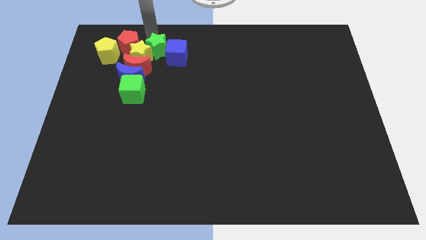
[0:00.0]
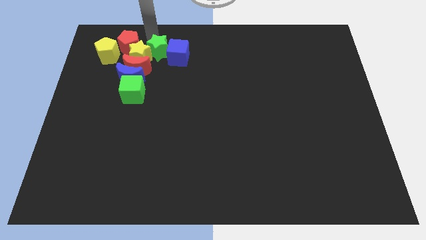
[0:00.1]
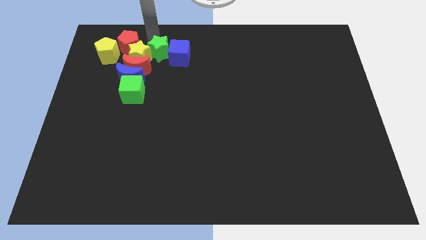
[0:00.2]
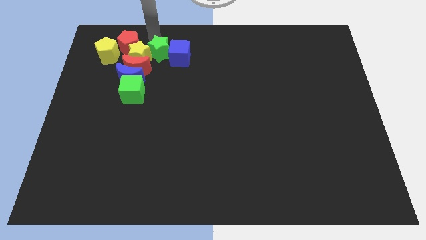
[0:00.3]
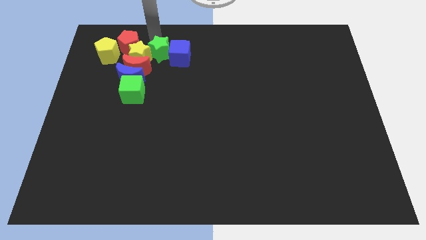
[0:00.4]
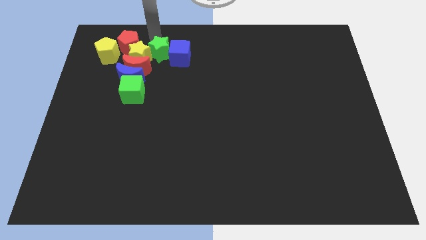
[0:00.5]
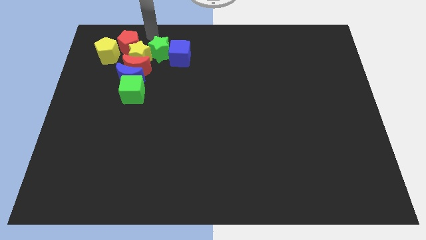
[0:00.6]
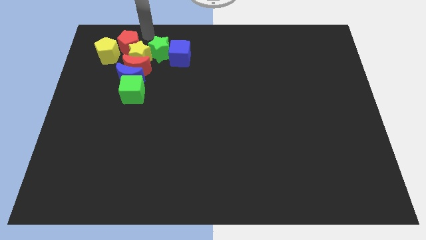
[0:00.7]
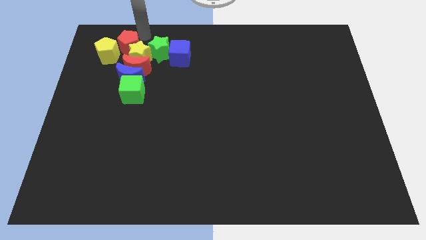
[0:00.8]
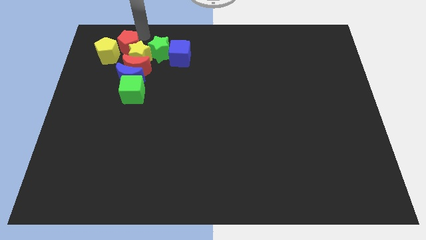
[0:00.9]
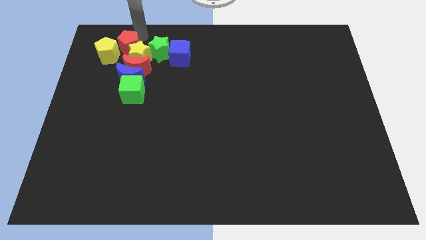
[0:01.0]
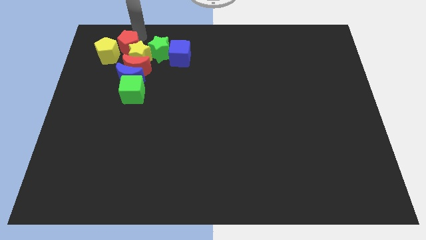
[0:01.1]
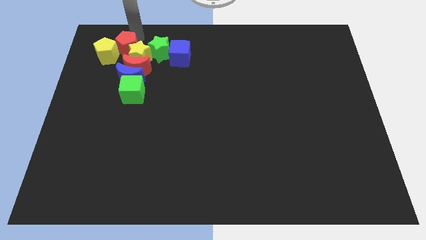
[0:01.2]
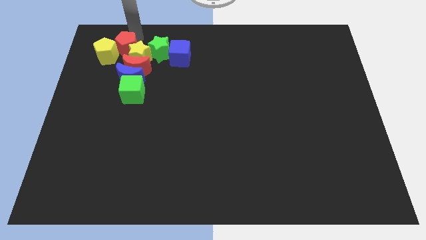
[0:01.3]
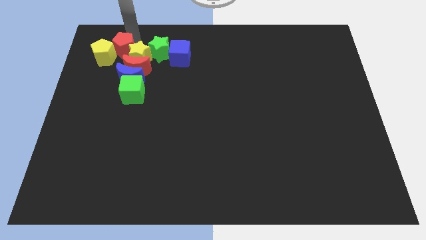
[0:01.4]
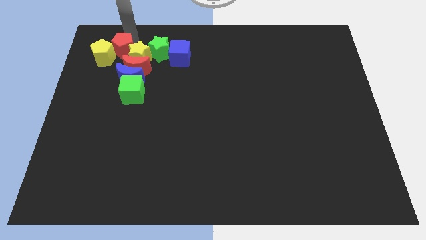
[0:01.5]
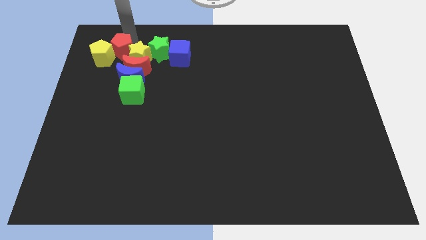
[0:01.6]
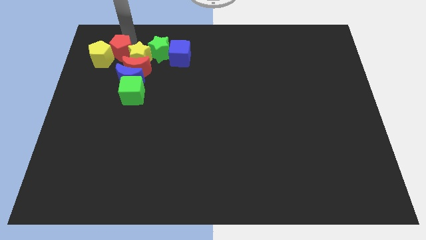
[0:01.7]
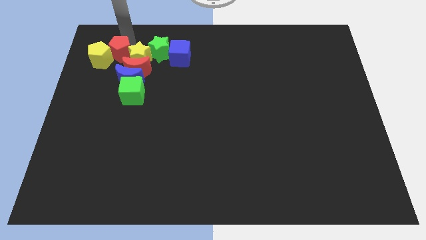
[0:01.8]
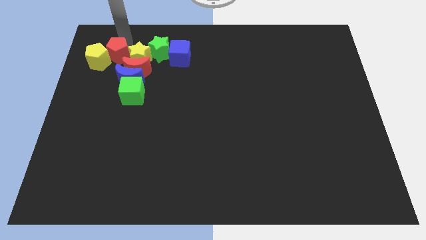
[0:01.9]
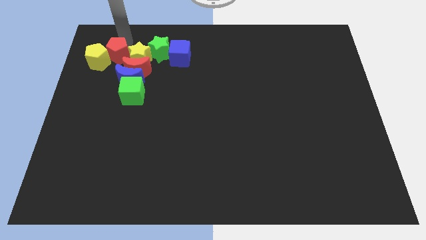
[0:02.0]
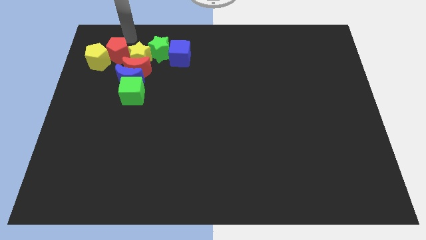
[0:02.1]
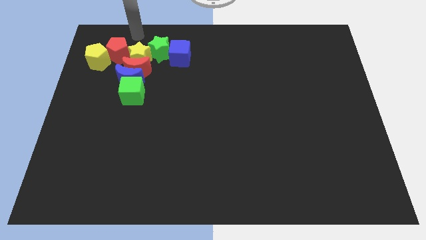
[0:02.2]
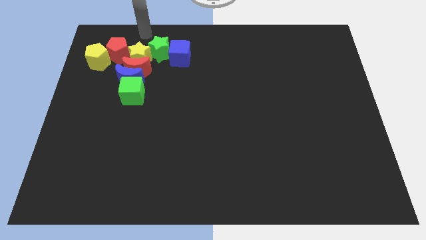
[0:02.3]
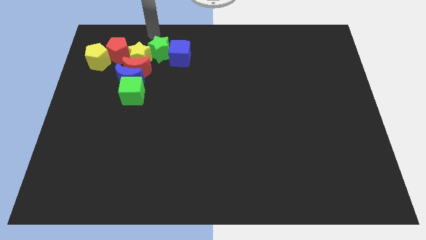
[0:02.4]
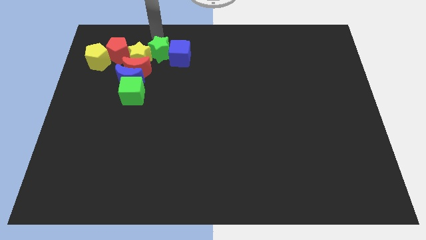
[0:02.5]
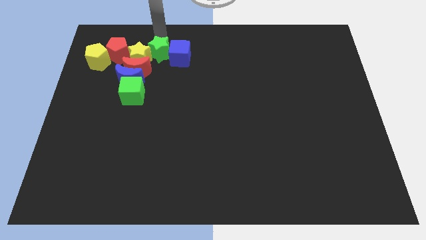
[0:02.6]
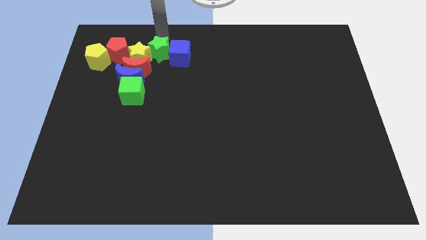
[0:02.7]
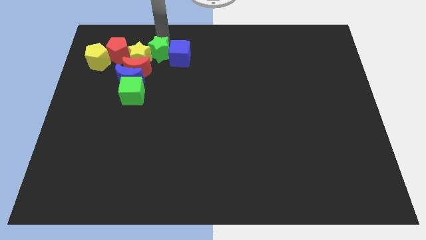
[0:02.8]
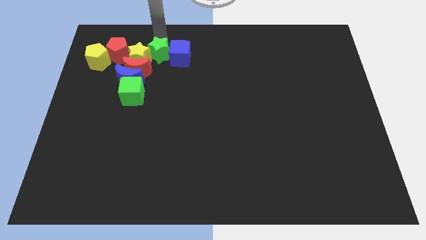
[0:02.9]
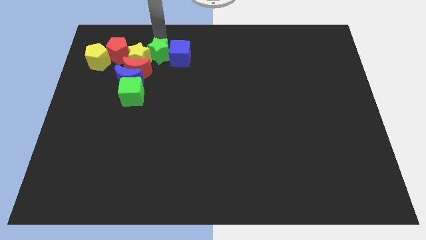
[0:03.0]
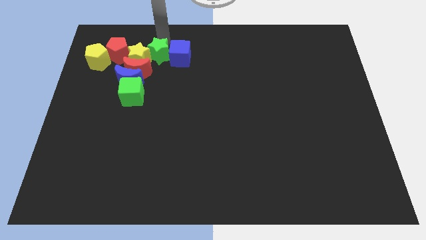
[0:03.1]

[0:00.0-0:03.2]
slightly move the green star and red pentagon into the group of blocks

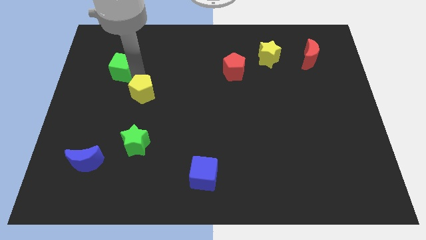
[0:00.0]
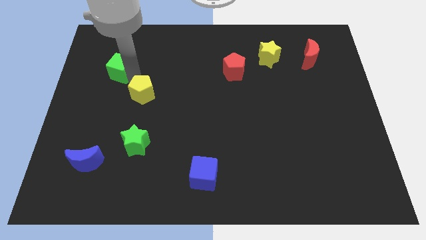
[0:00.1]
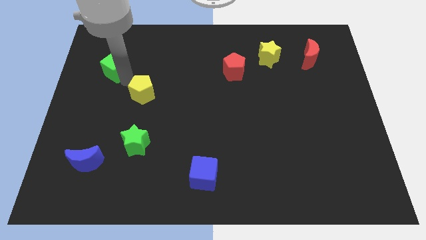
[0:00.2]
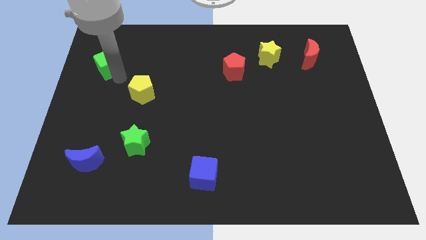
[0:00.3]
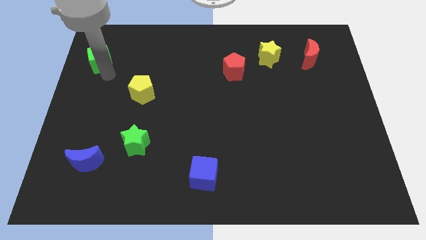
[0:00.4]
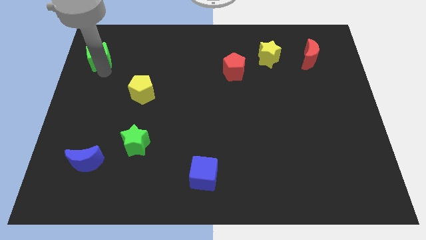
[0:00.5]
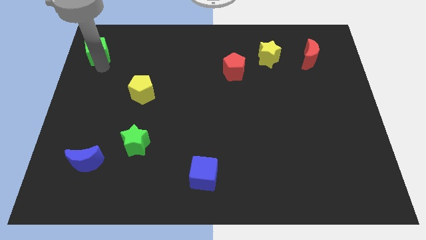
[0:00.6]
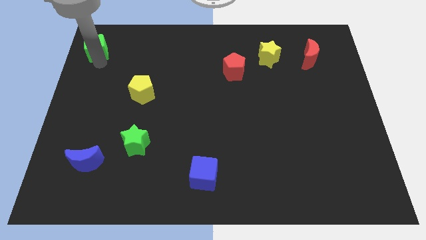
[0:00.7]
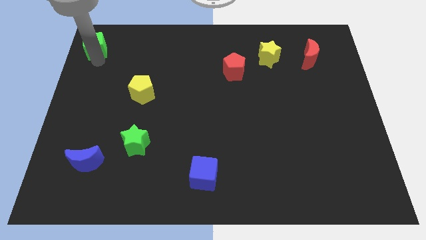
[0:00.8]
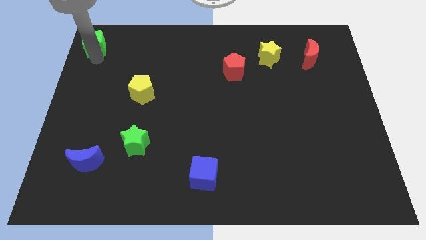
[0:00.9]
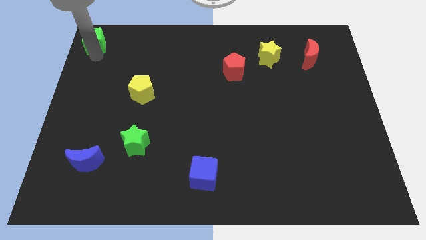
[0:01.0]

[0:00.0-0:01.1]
separate the green cube from yellow pentagon

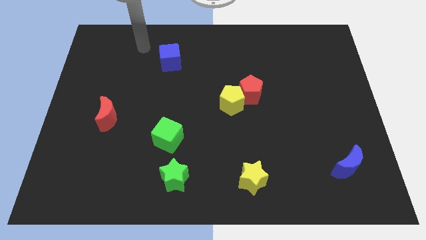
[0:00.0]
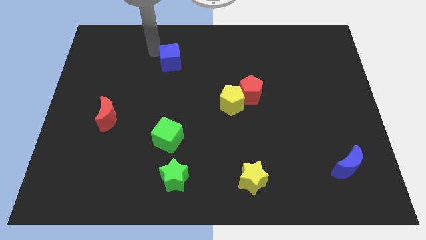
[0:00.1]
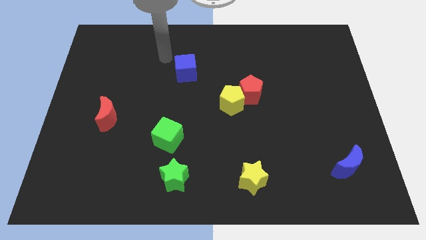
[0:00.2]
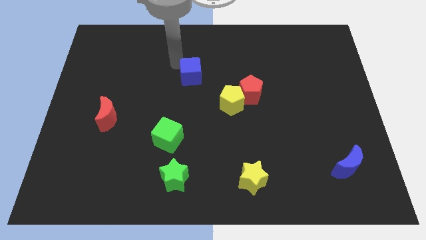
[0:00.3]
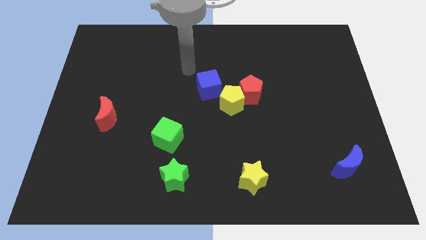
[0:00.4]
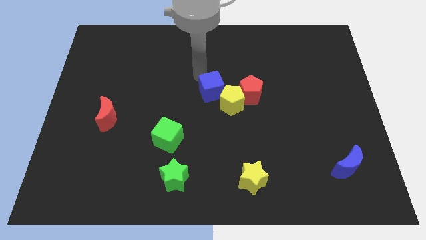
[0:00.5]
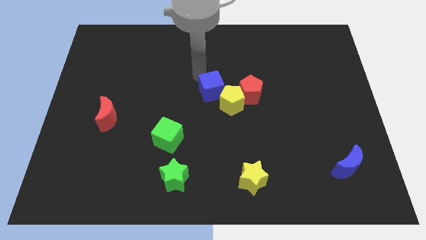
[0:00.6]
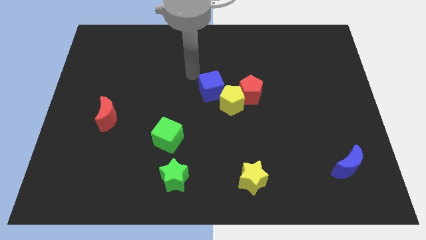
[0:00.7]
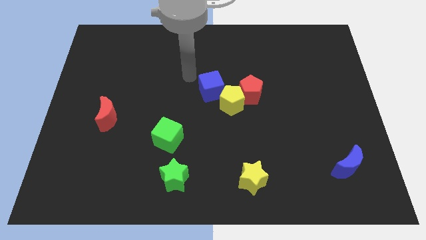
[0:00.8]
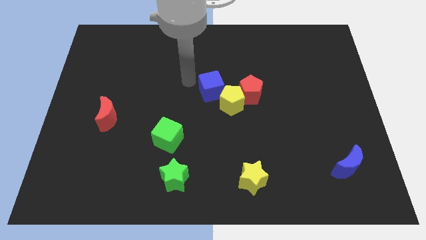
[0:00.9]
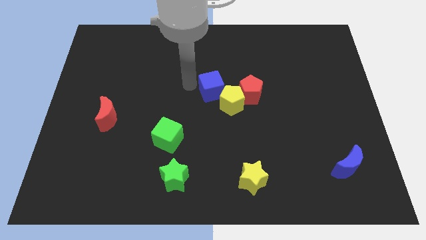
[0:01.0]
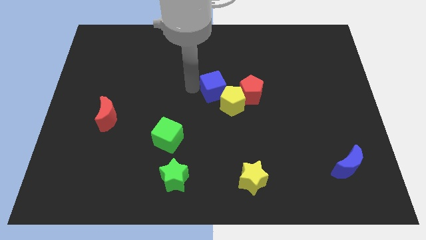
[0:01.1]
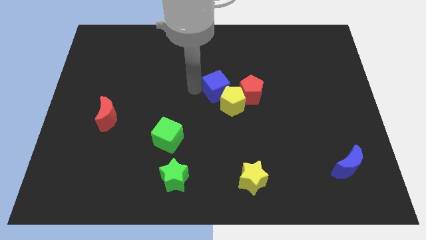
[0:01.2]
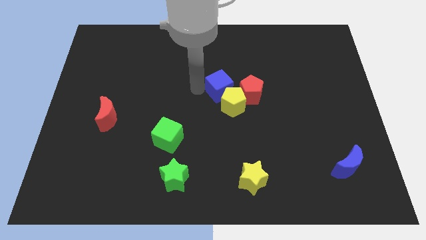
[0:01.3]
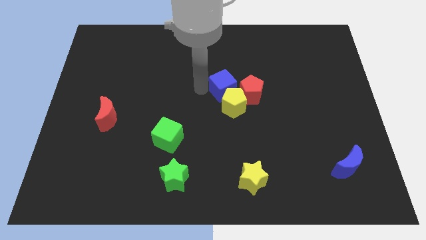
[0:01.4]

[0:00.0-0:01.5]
place the blue cube at the top left of the yellow

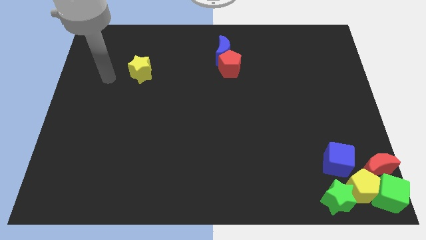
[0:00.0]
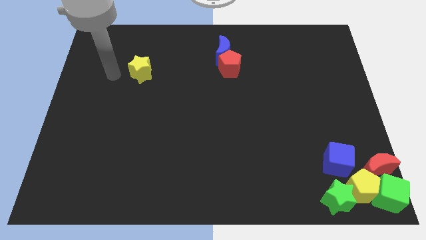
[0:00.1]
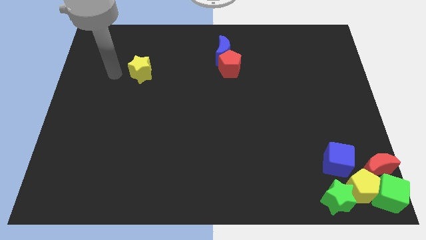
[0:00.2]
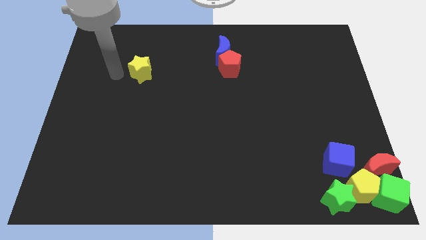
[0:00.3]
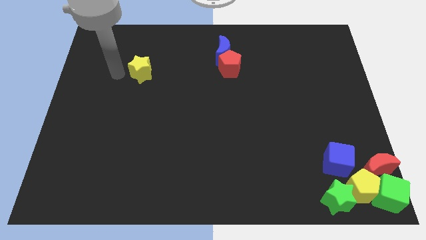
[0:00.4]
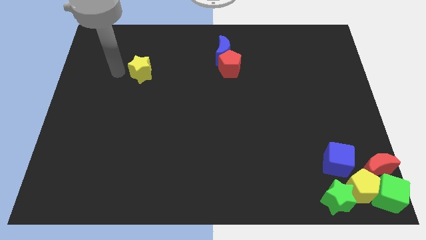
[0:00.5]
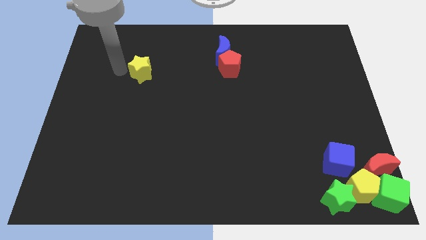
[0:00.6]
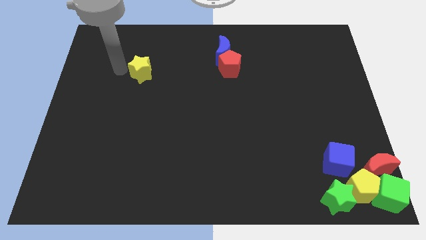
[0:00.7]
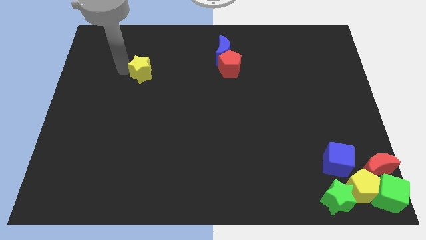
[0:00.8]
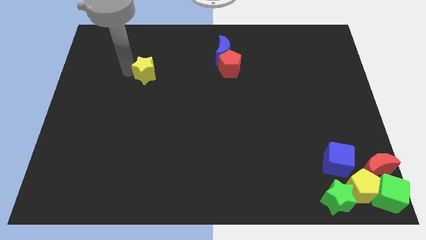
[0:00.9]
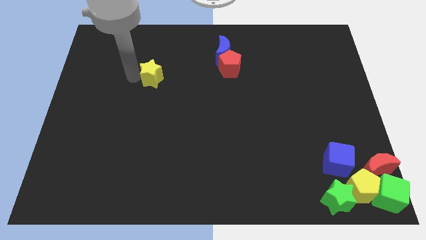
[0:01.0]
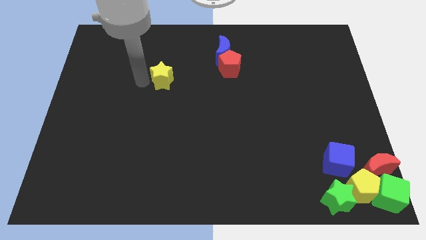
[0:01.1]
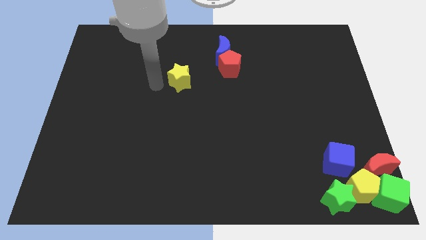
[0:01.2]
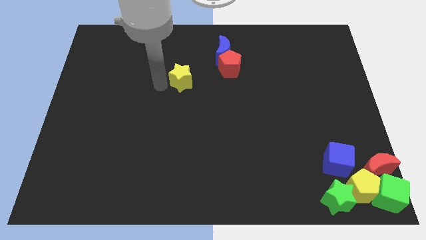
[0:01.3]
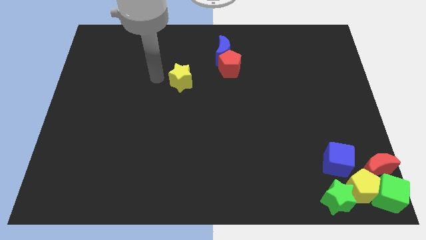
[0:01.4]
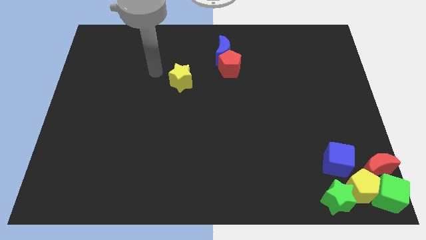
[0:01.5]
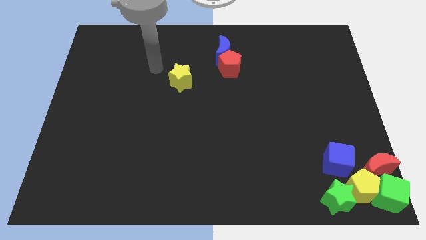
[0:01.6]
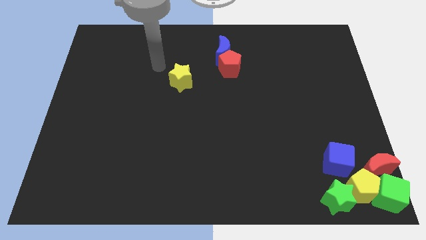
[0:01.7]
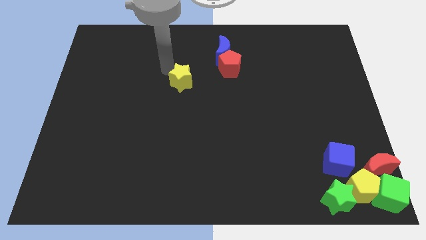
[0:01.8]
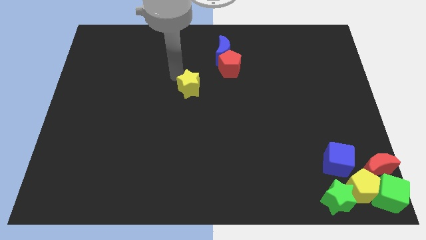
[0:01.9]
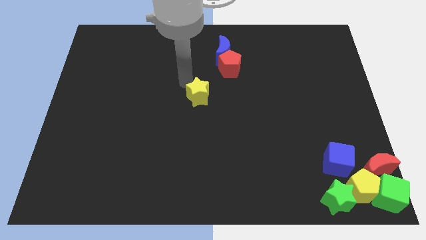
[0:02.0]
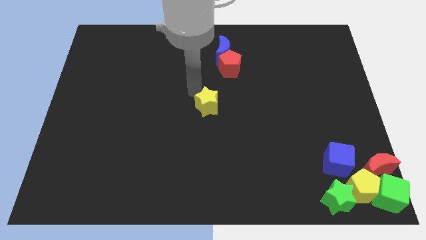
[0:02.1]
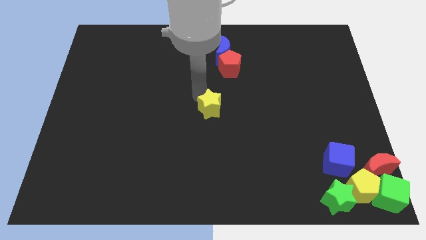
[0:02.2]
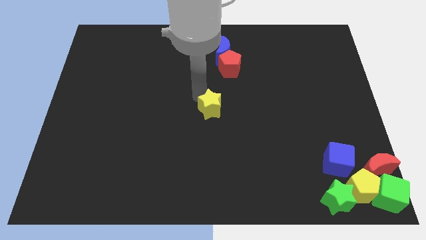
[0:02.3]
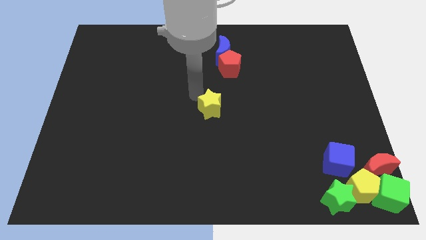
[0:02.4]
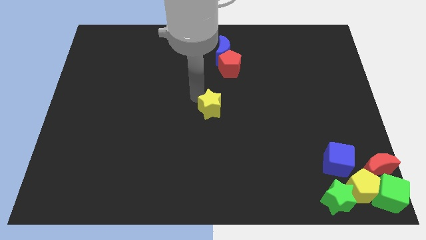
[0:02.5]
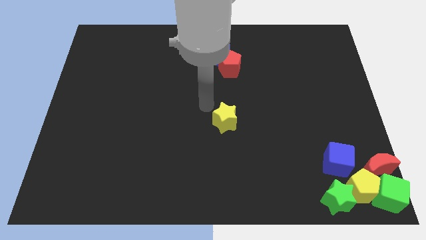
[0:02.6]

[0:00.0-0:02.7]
push yellow star below red pentagon

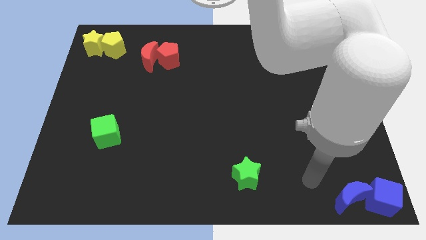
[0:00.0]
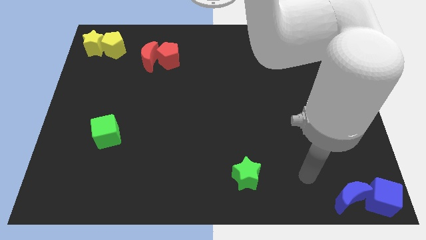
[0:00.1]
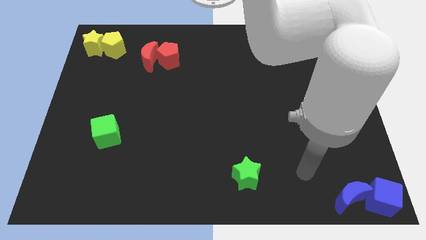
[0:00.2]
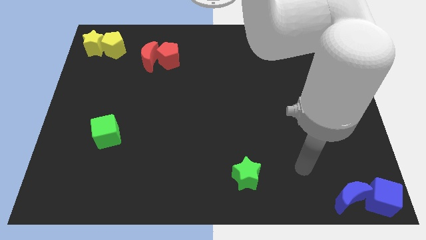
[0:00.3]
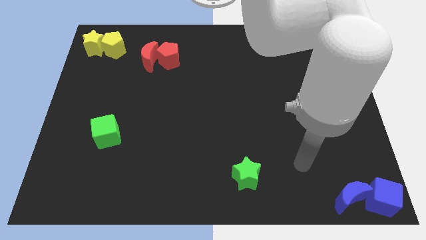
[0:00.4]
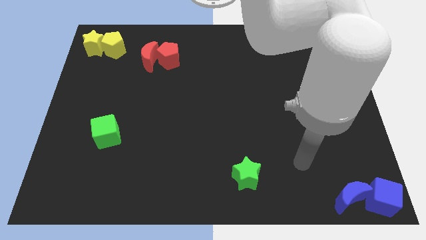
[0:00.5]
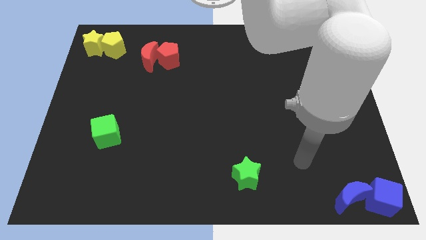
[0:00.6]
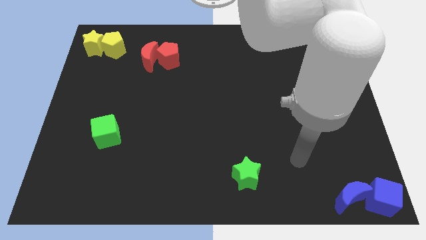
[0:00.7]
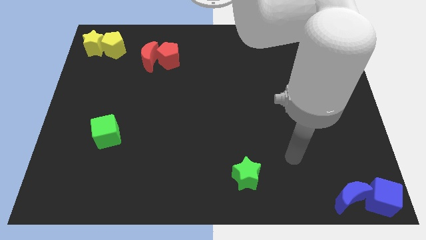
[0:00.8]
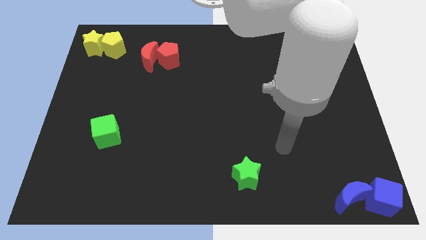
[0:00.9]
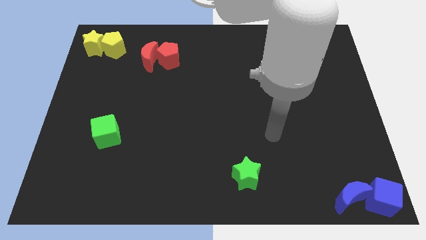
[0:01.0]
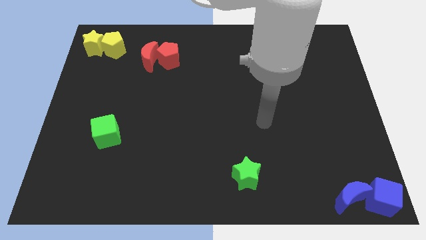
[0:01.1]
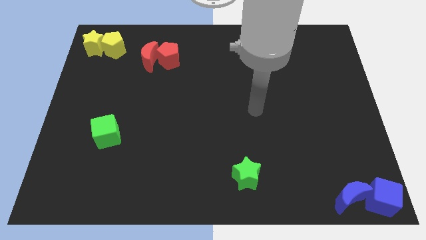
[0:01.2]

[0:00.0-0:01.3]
move your arm towards the top side of the board
